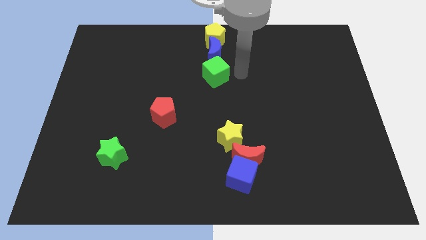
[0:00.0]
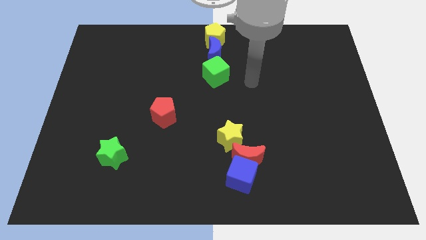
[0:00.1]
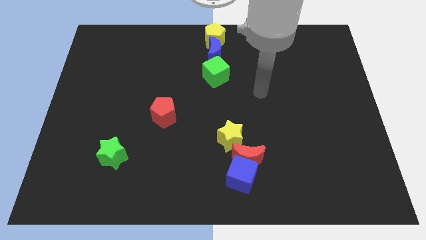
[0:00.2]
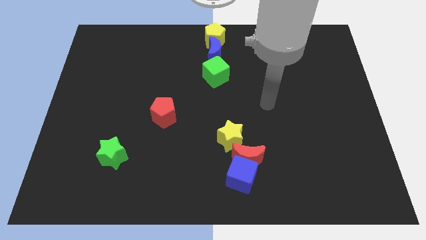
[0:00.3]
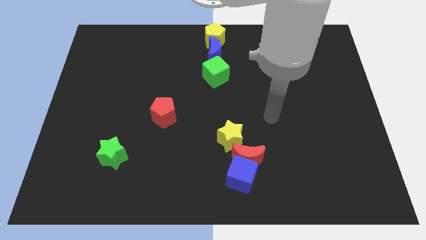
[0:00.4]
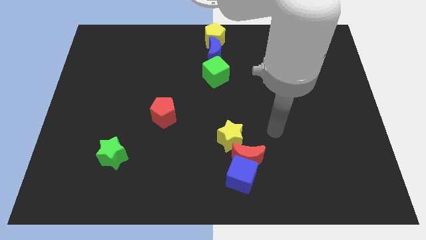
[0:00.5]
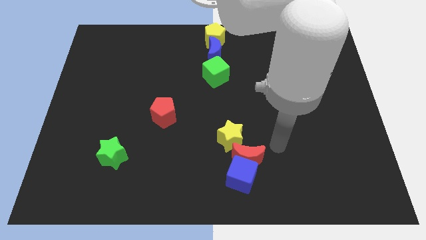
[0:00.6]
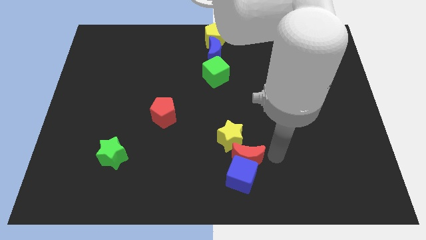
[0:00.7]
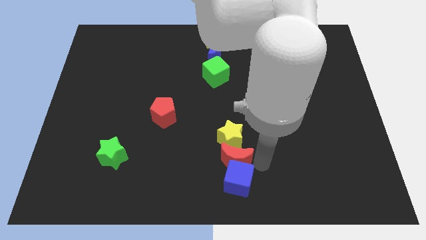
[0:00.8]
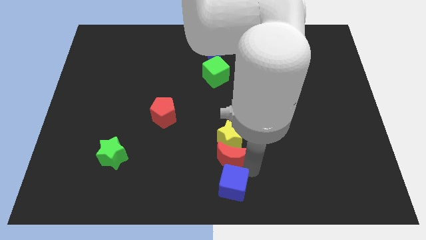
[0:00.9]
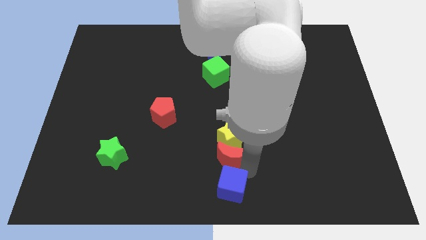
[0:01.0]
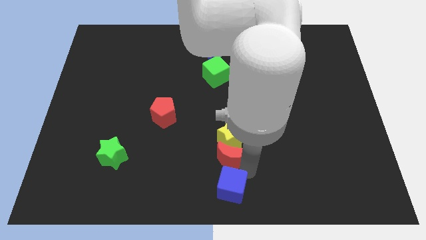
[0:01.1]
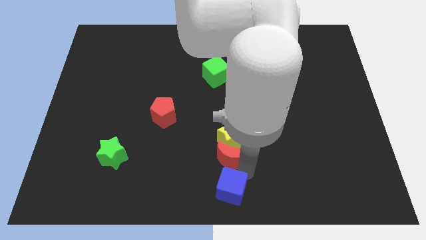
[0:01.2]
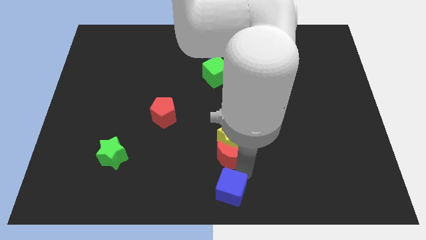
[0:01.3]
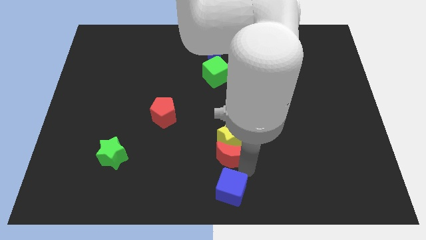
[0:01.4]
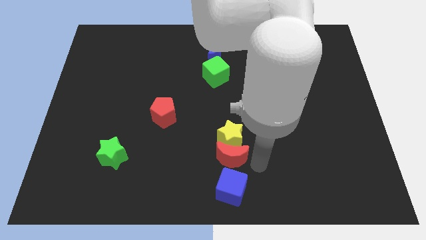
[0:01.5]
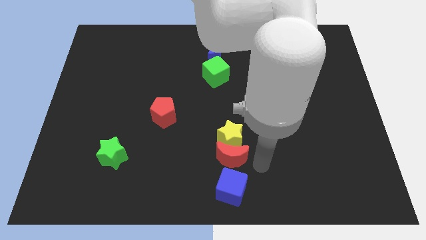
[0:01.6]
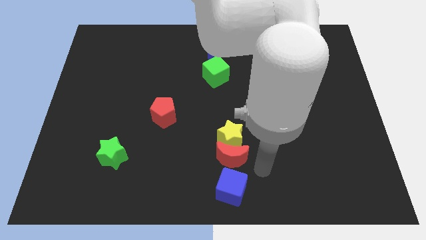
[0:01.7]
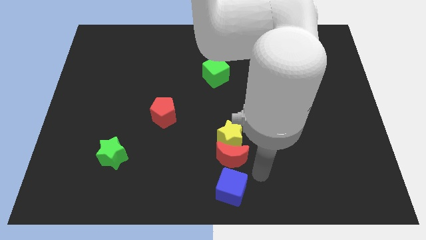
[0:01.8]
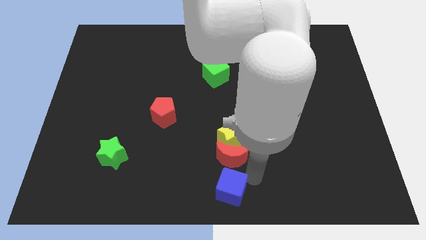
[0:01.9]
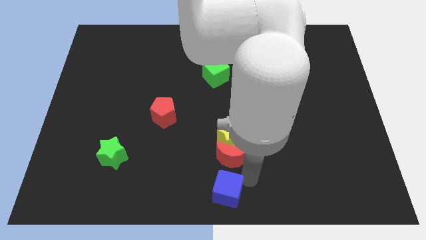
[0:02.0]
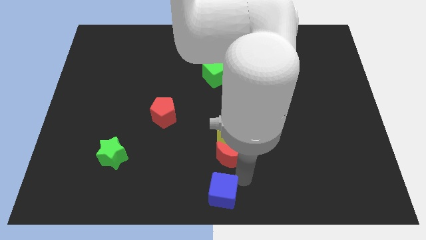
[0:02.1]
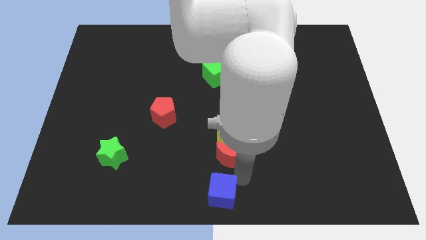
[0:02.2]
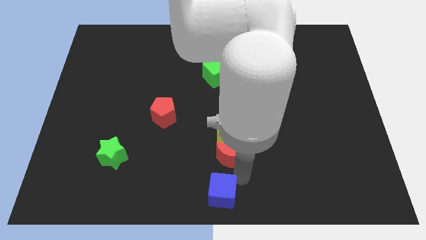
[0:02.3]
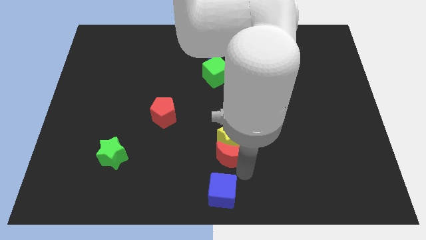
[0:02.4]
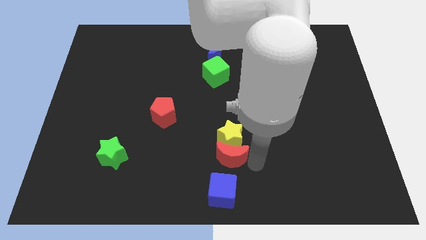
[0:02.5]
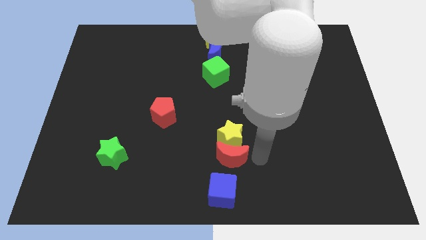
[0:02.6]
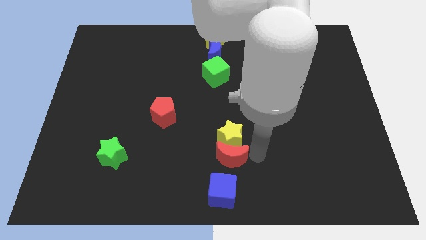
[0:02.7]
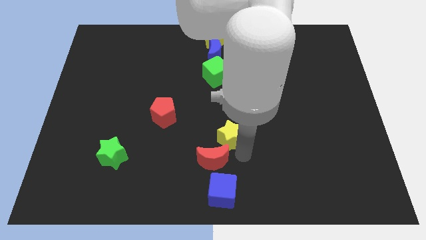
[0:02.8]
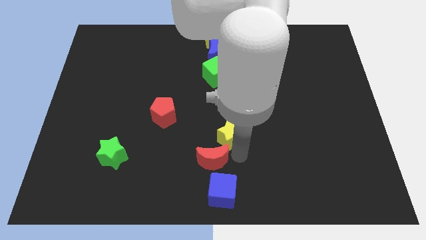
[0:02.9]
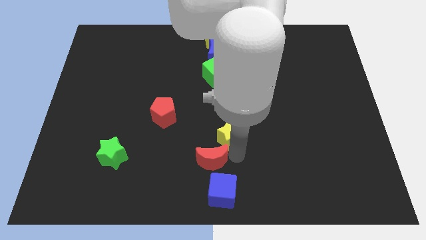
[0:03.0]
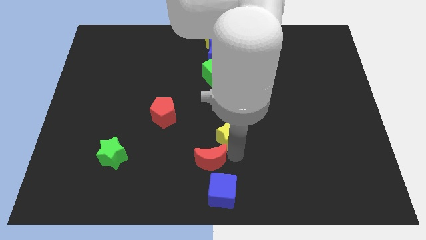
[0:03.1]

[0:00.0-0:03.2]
separate red moon from blue cube

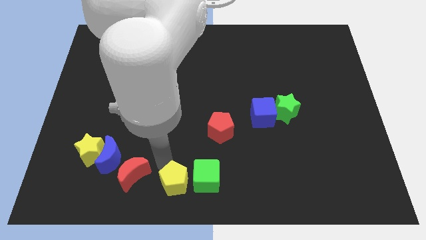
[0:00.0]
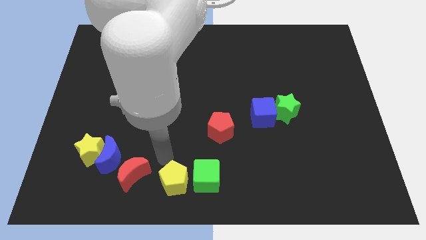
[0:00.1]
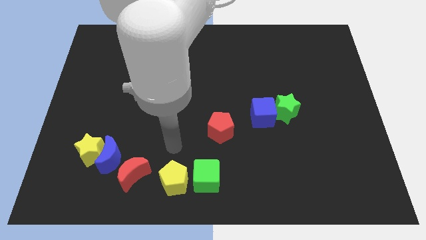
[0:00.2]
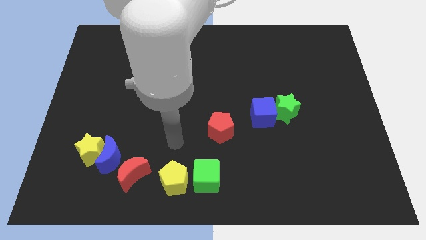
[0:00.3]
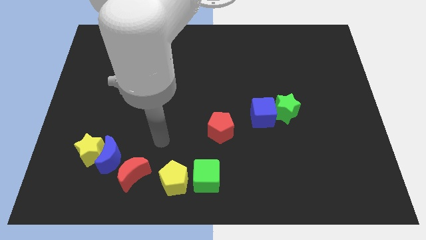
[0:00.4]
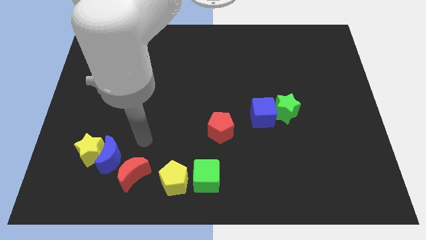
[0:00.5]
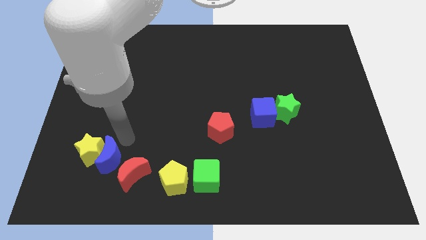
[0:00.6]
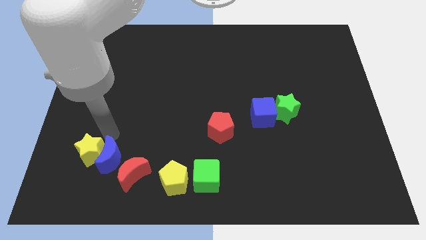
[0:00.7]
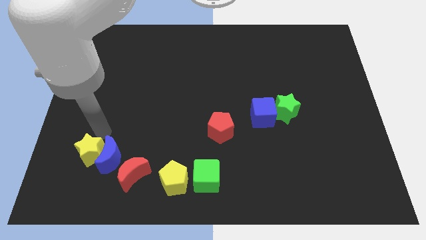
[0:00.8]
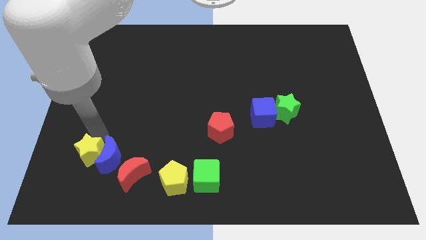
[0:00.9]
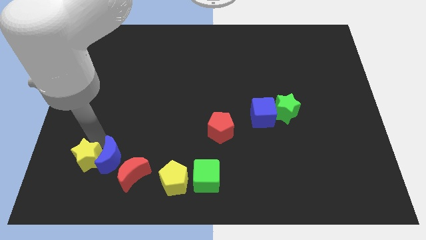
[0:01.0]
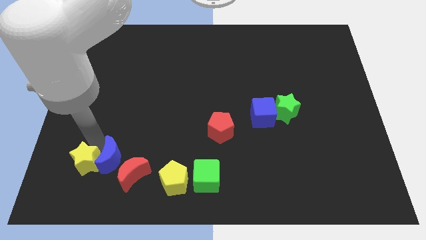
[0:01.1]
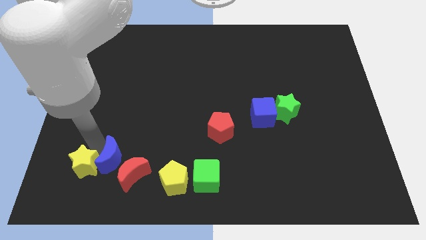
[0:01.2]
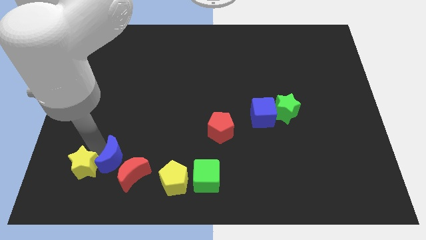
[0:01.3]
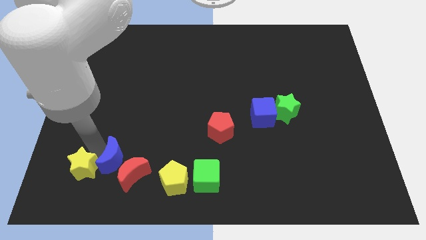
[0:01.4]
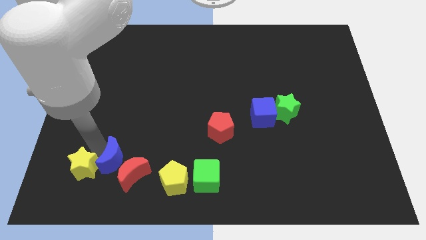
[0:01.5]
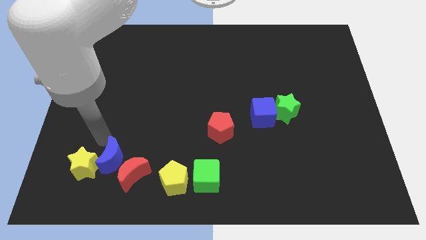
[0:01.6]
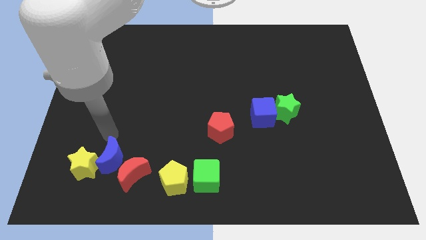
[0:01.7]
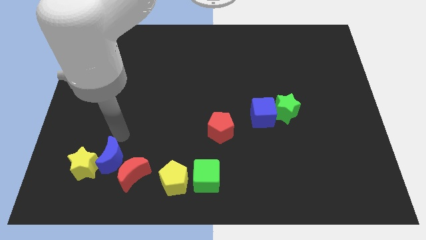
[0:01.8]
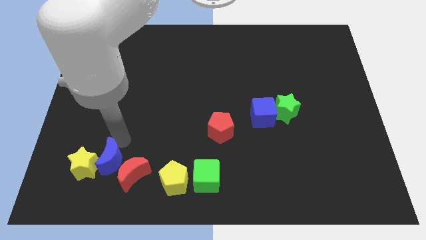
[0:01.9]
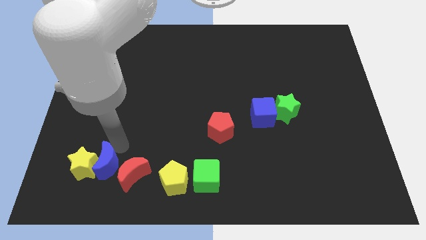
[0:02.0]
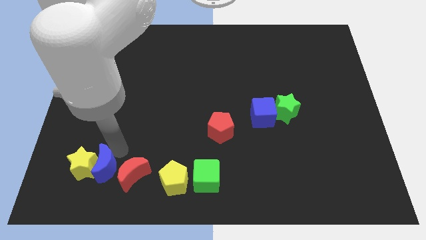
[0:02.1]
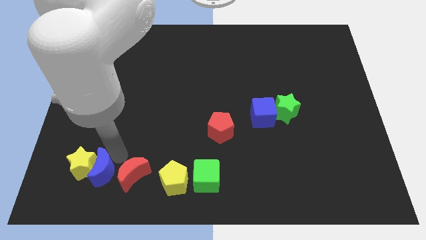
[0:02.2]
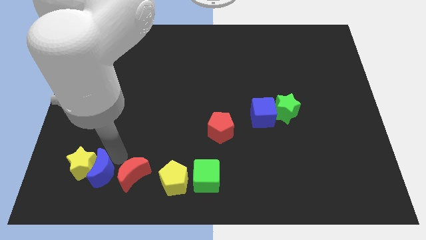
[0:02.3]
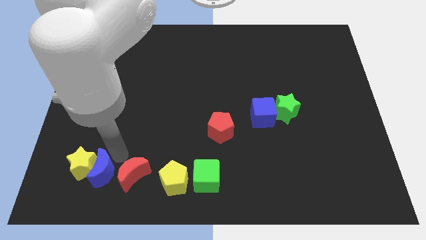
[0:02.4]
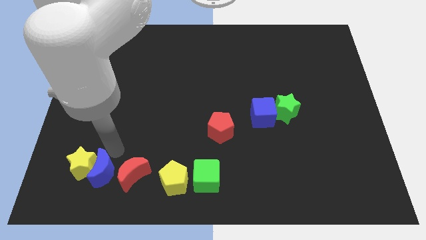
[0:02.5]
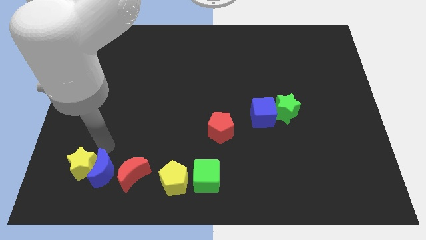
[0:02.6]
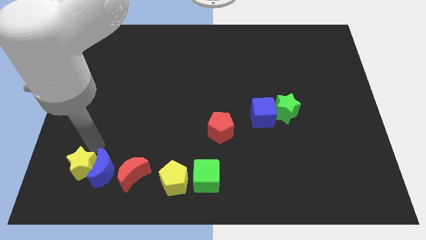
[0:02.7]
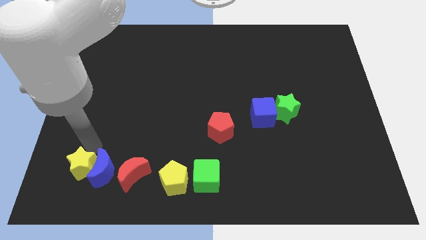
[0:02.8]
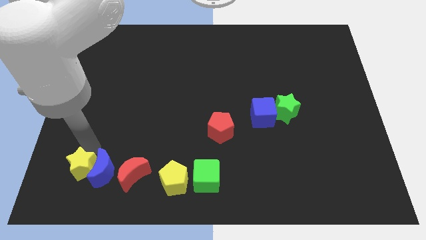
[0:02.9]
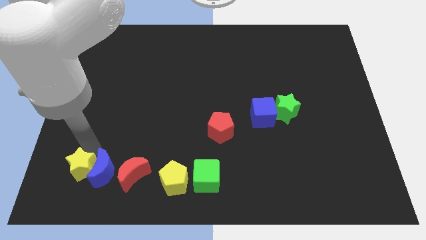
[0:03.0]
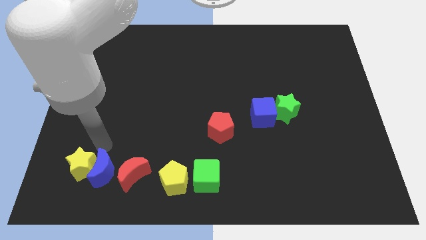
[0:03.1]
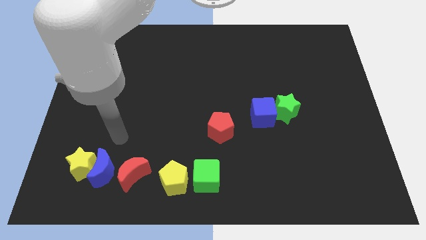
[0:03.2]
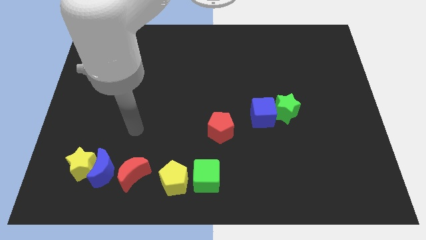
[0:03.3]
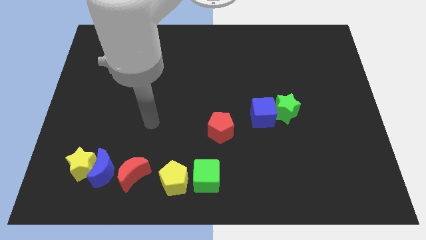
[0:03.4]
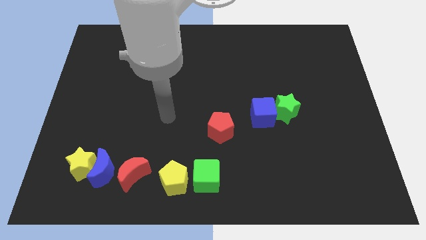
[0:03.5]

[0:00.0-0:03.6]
adjust the group of blocks to form a horizontal line

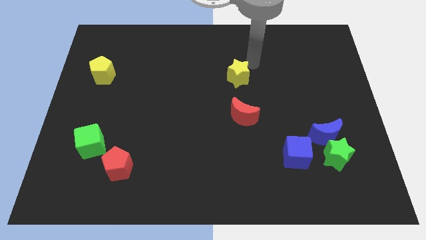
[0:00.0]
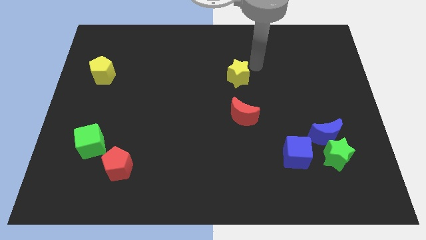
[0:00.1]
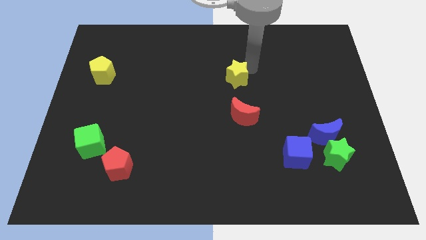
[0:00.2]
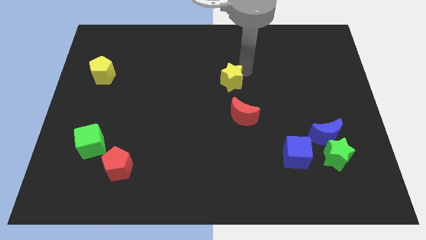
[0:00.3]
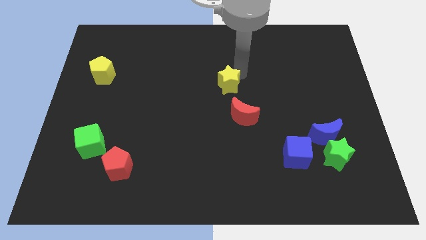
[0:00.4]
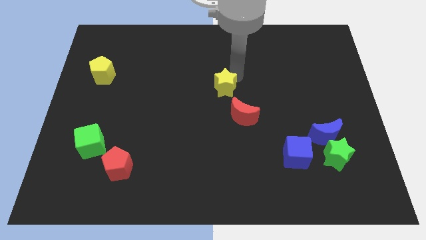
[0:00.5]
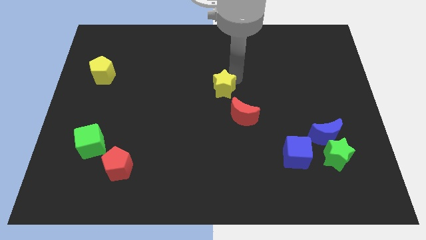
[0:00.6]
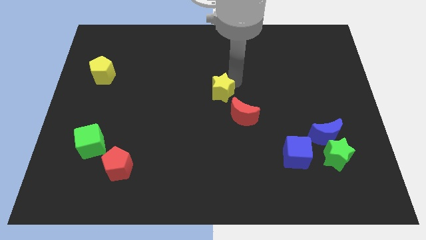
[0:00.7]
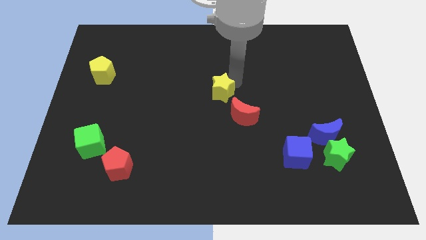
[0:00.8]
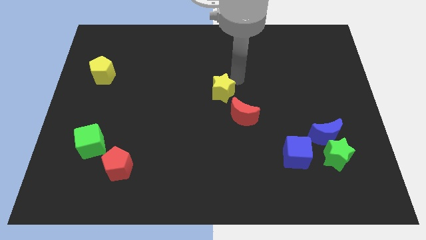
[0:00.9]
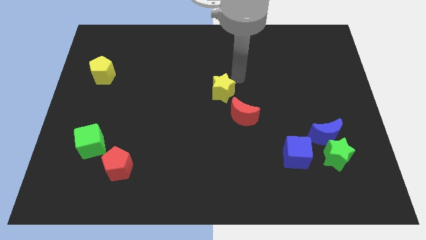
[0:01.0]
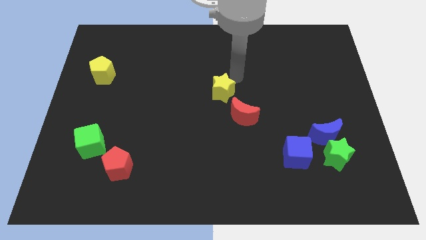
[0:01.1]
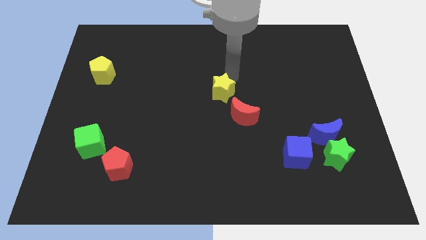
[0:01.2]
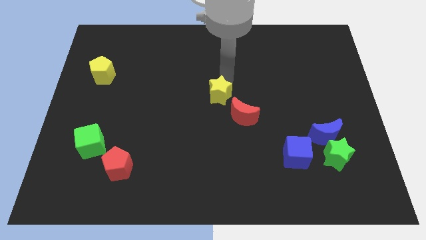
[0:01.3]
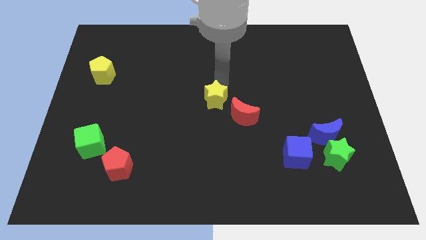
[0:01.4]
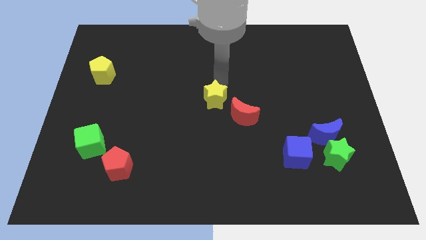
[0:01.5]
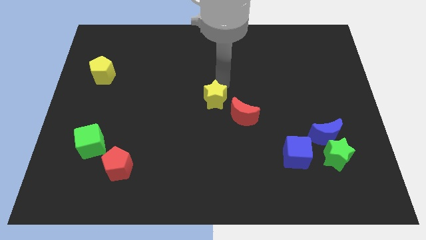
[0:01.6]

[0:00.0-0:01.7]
place the yellow star at the center of the board

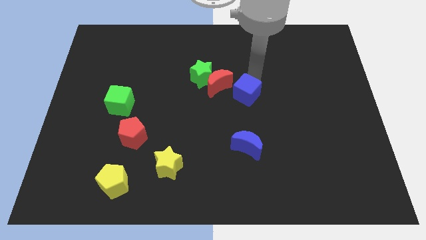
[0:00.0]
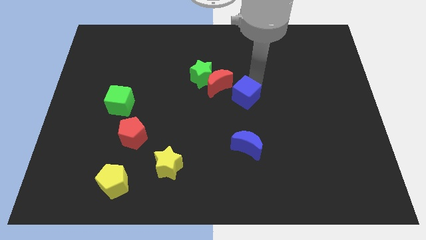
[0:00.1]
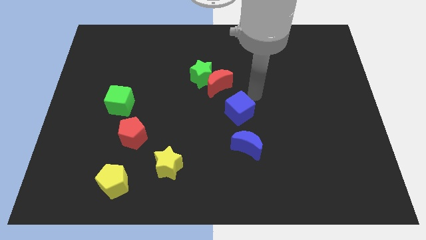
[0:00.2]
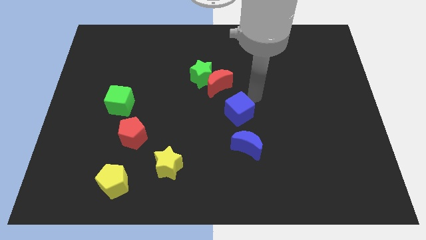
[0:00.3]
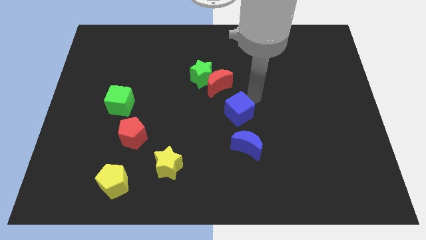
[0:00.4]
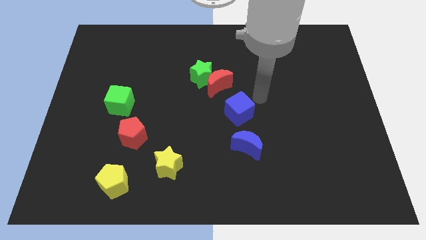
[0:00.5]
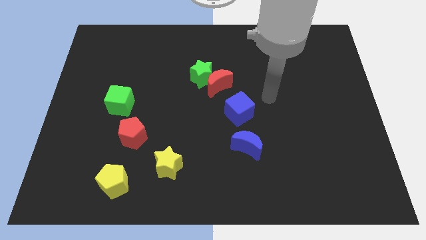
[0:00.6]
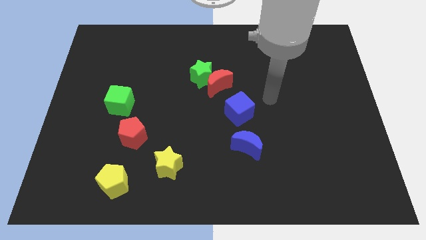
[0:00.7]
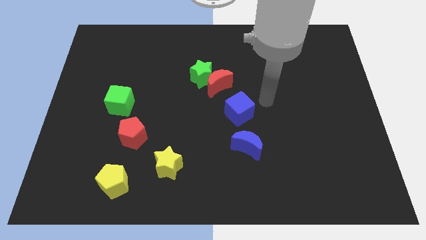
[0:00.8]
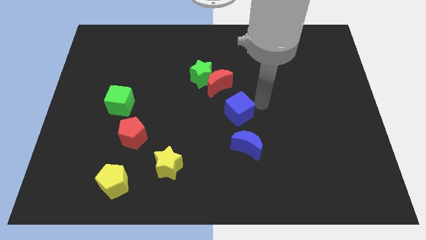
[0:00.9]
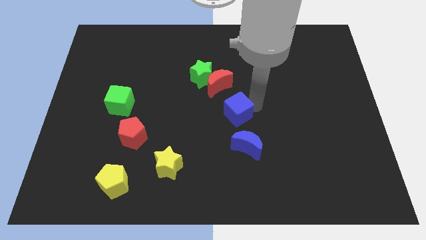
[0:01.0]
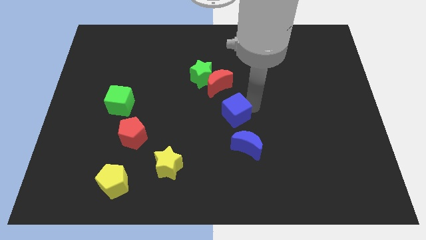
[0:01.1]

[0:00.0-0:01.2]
place the blue cube below the red crescent
